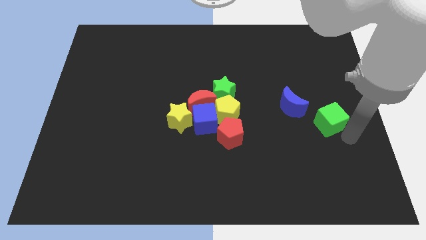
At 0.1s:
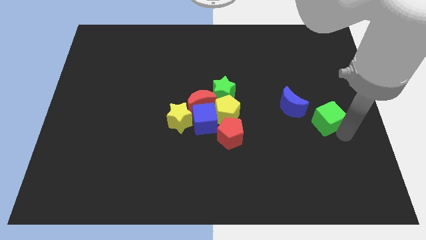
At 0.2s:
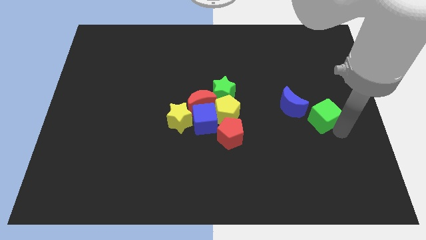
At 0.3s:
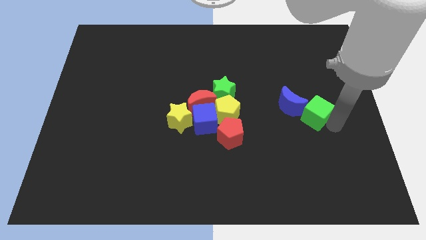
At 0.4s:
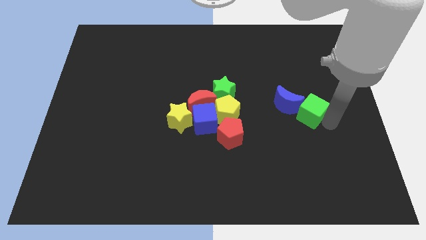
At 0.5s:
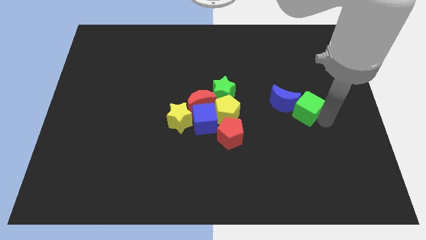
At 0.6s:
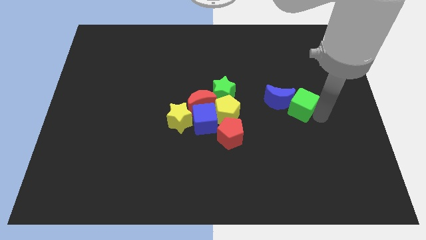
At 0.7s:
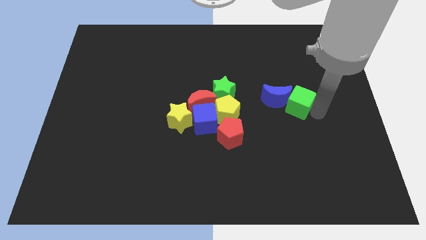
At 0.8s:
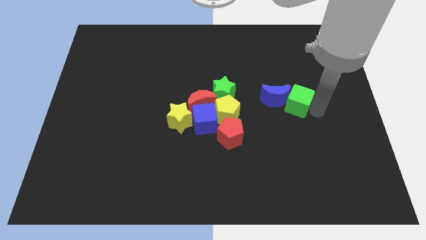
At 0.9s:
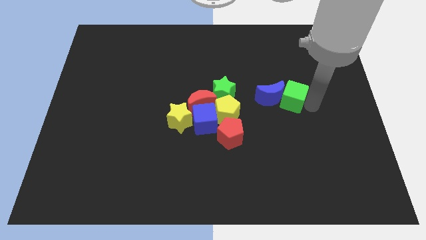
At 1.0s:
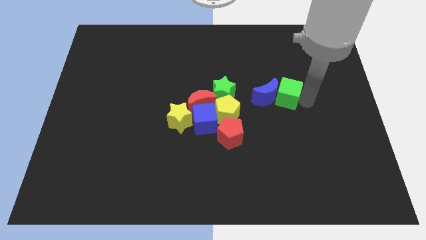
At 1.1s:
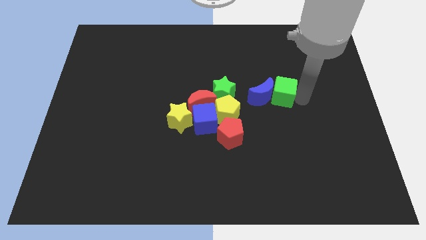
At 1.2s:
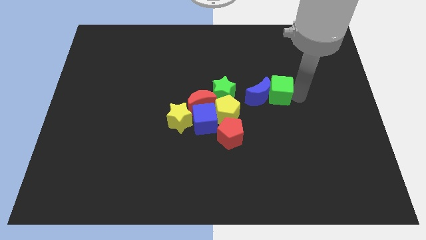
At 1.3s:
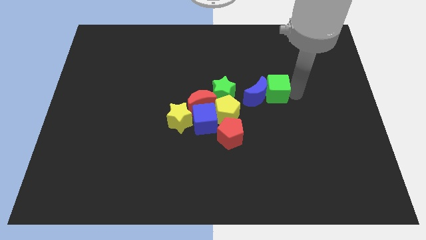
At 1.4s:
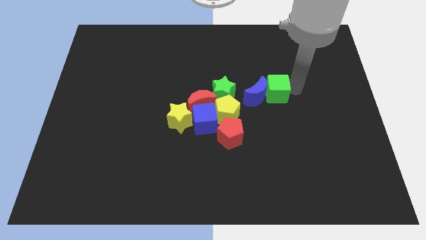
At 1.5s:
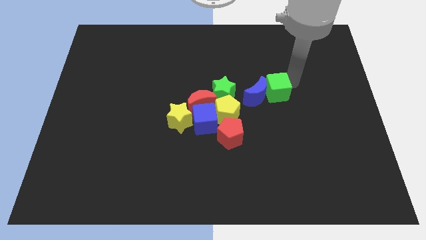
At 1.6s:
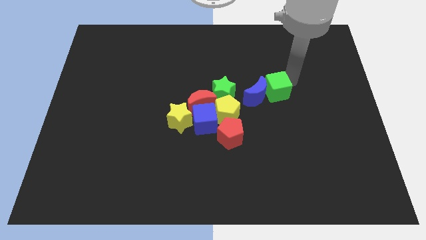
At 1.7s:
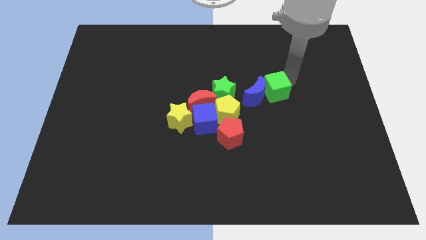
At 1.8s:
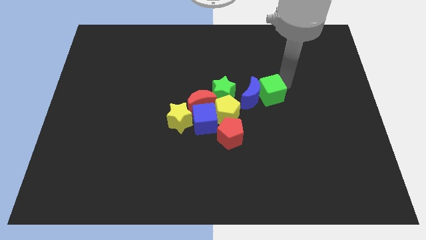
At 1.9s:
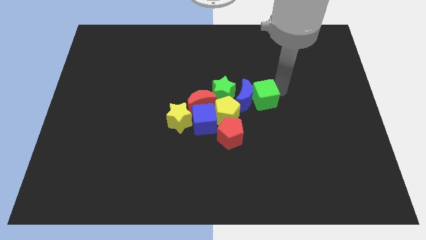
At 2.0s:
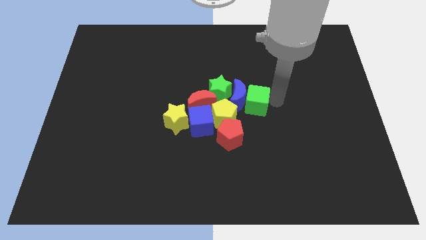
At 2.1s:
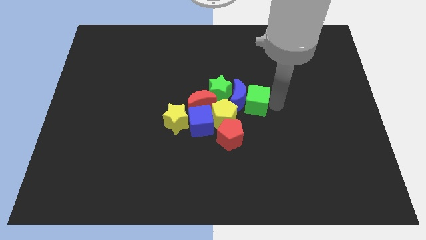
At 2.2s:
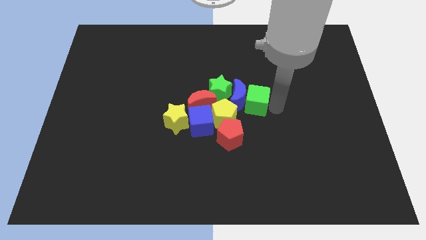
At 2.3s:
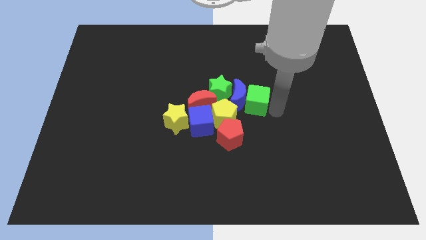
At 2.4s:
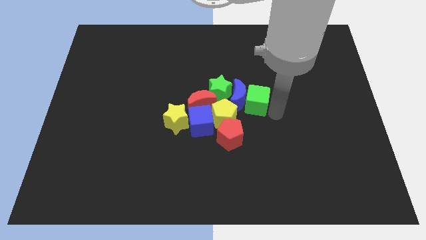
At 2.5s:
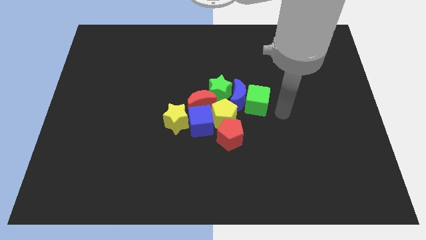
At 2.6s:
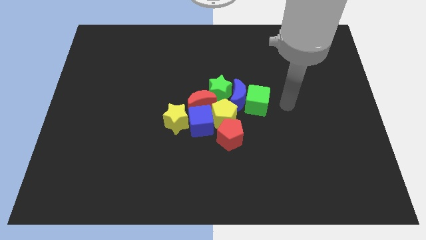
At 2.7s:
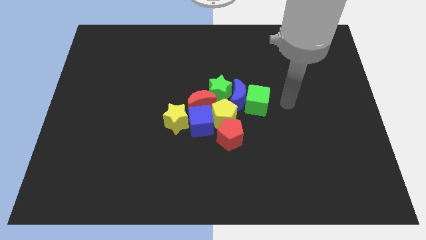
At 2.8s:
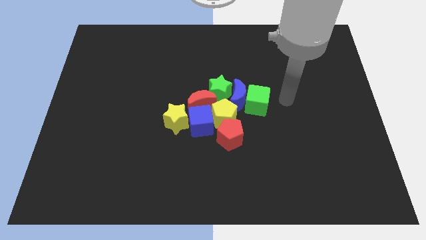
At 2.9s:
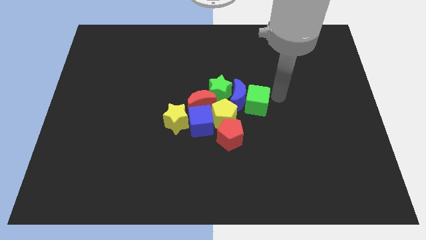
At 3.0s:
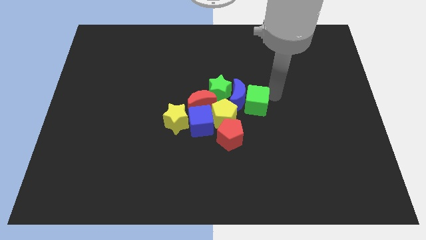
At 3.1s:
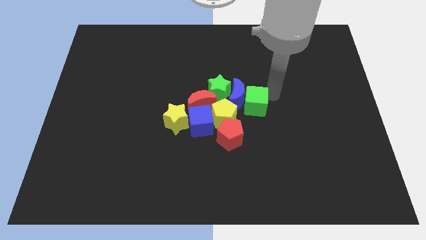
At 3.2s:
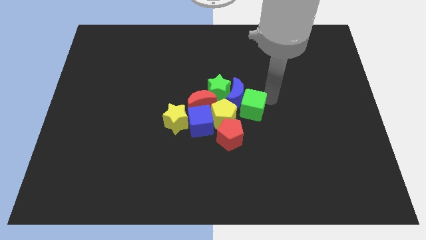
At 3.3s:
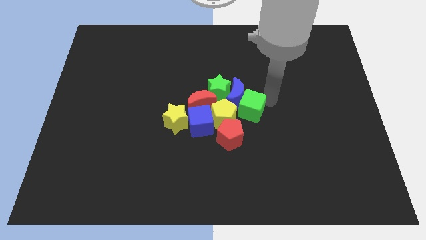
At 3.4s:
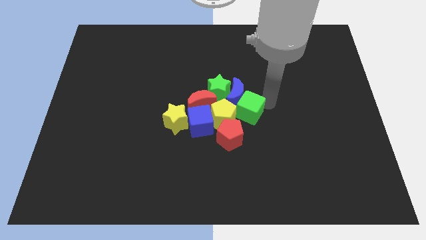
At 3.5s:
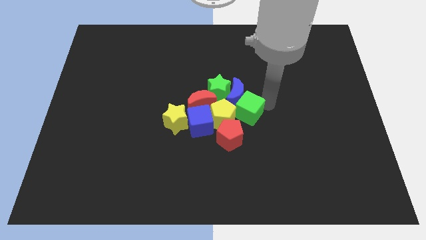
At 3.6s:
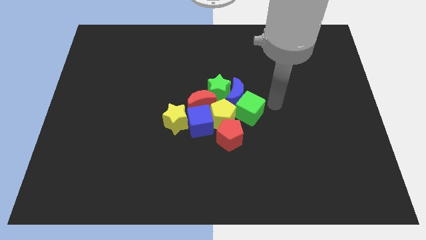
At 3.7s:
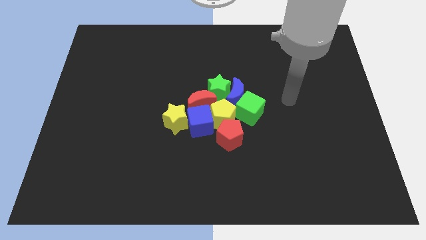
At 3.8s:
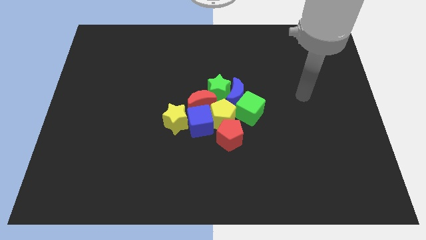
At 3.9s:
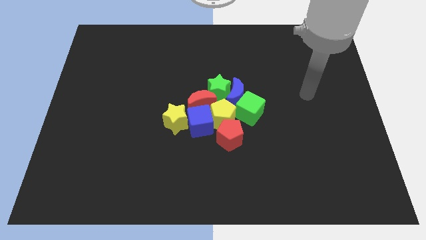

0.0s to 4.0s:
push the green cube and blue crescent into the group of blocks

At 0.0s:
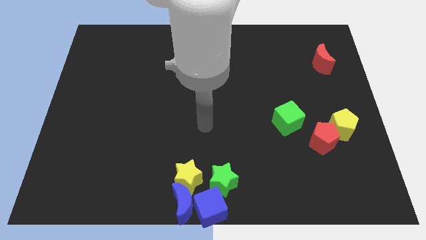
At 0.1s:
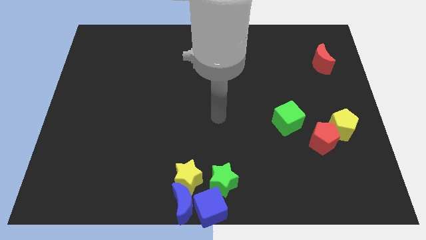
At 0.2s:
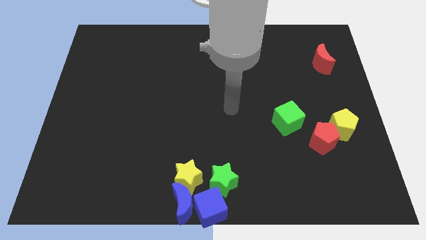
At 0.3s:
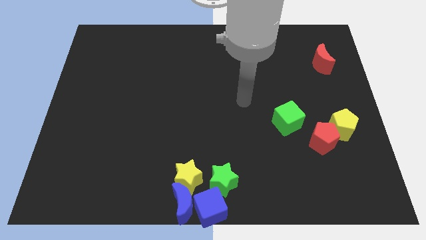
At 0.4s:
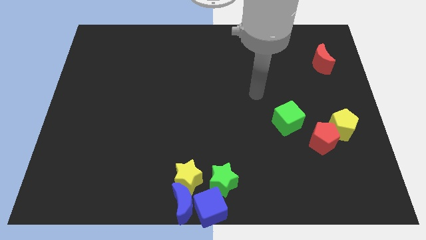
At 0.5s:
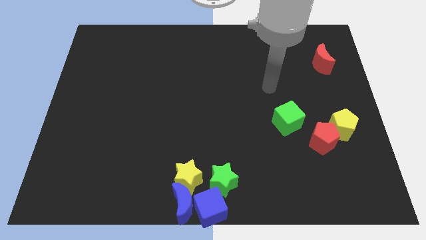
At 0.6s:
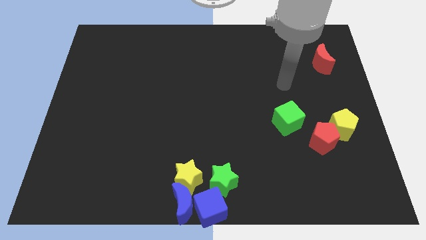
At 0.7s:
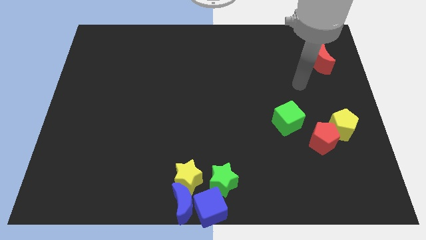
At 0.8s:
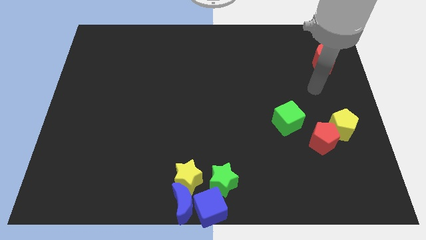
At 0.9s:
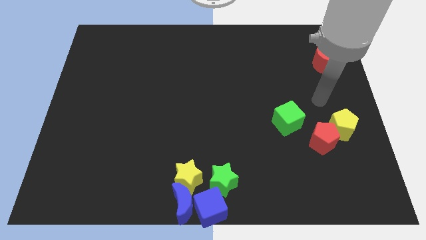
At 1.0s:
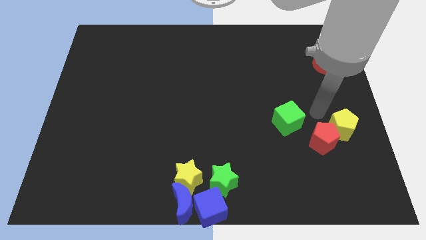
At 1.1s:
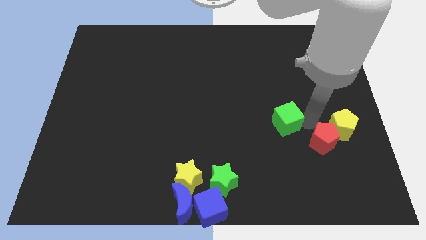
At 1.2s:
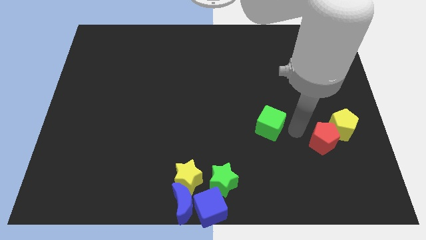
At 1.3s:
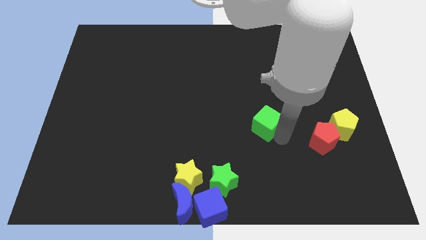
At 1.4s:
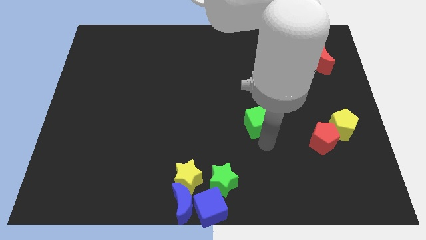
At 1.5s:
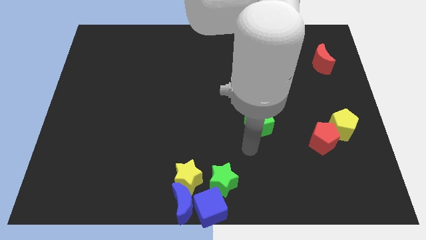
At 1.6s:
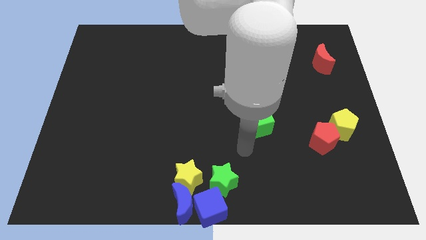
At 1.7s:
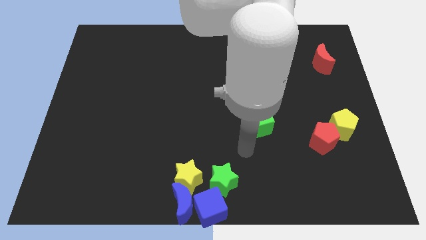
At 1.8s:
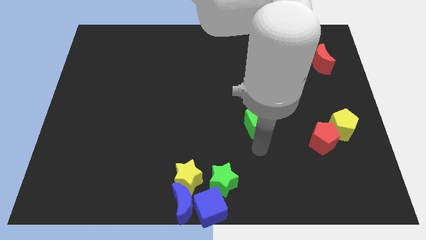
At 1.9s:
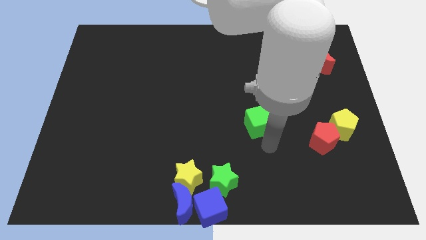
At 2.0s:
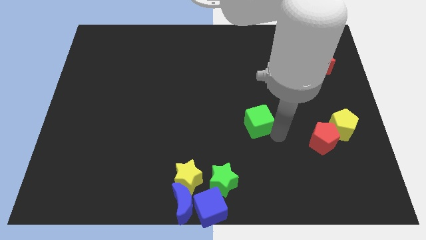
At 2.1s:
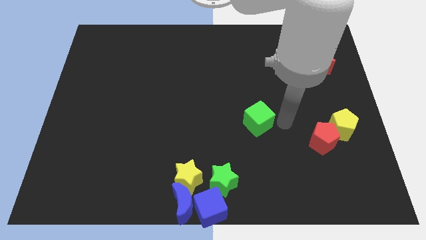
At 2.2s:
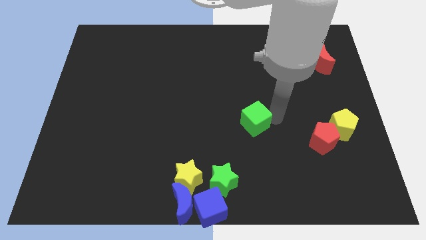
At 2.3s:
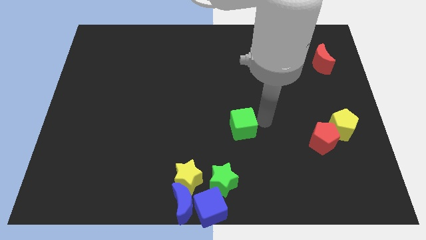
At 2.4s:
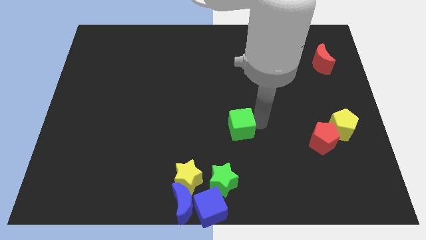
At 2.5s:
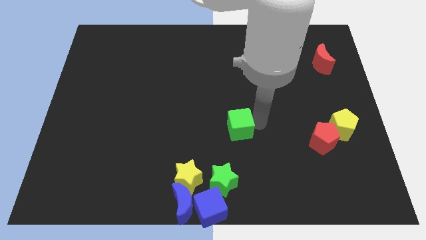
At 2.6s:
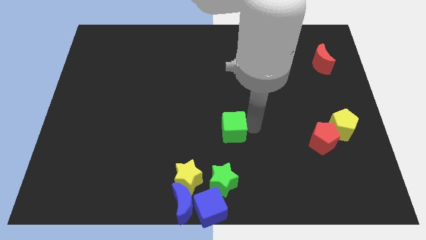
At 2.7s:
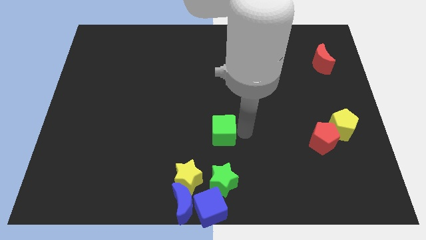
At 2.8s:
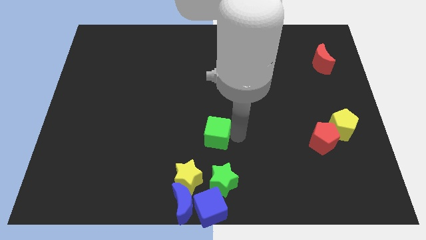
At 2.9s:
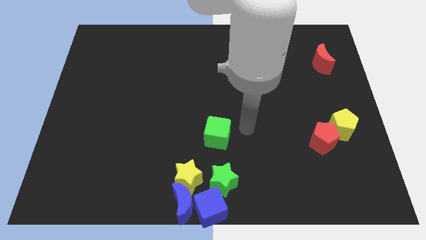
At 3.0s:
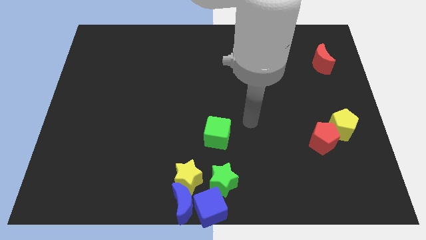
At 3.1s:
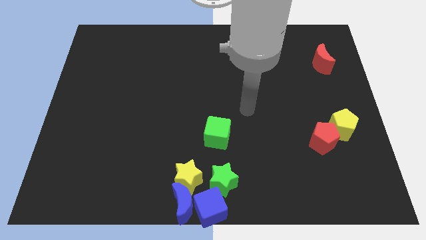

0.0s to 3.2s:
push the green cube above the green star

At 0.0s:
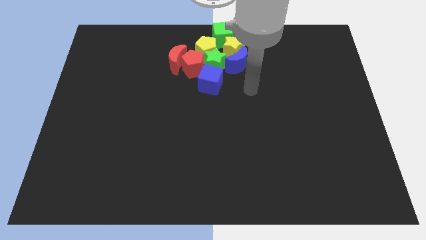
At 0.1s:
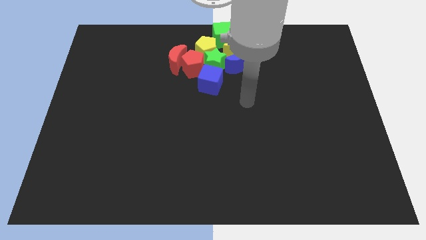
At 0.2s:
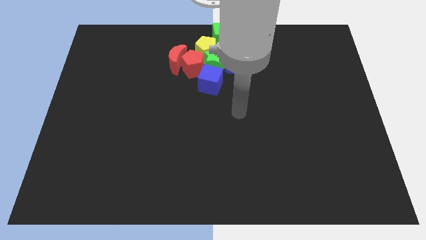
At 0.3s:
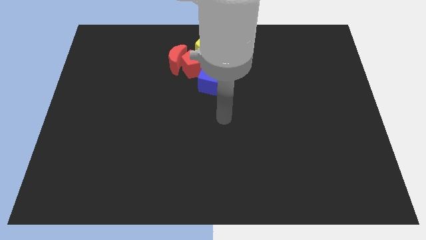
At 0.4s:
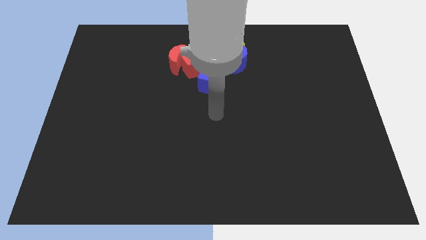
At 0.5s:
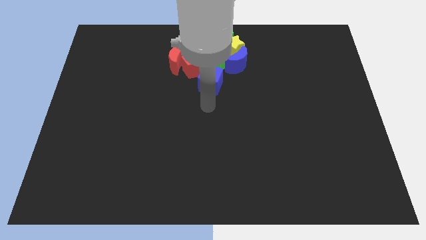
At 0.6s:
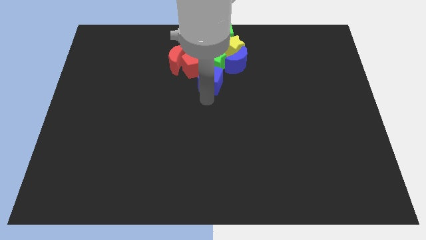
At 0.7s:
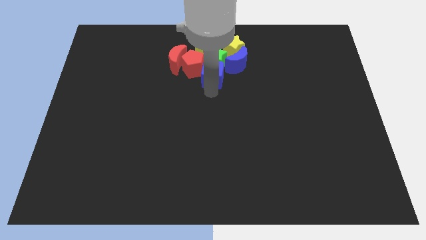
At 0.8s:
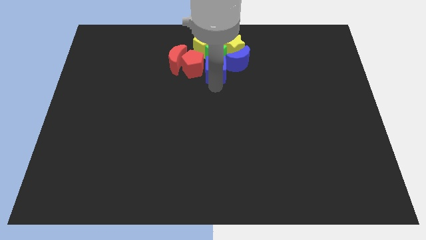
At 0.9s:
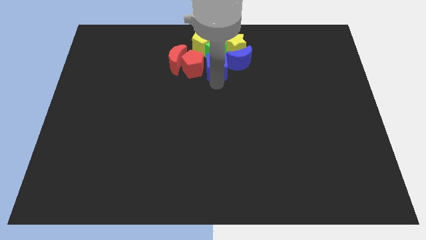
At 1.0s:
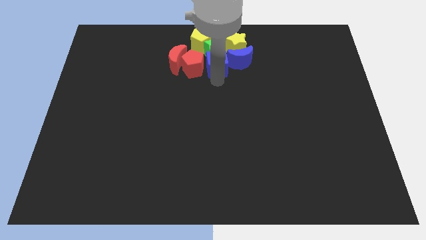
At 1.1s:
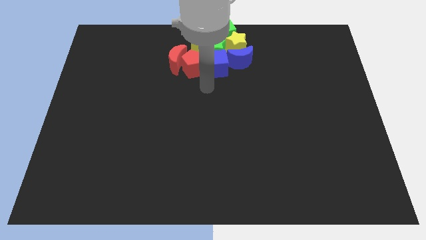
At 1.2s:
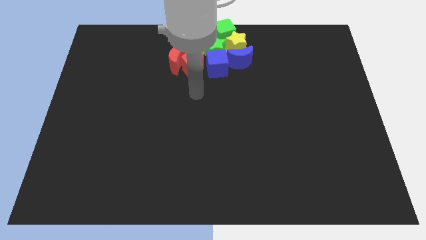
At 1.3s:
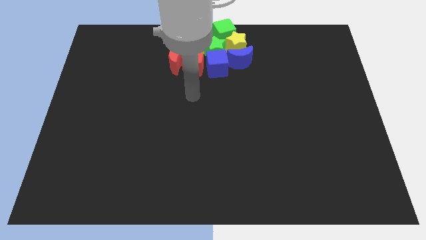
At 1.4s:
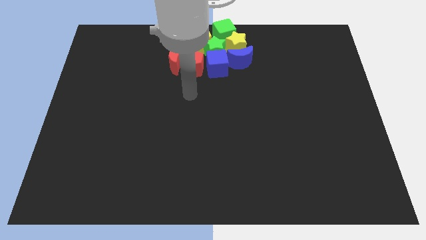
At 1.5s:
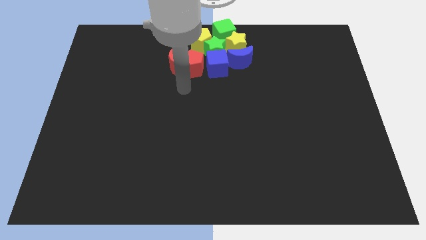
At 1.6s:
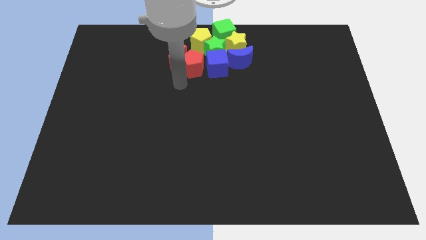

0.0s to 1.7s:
push the blue cube into the green star

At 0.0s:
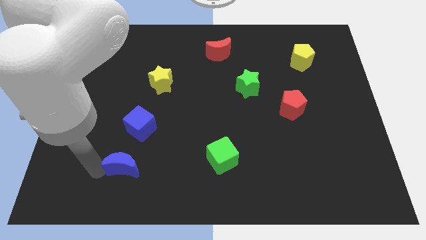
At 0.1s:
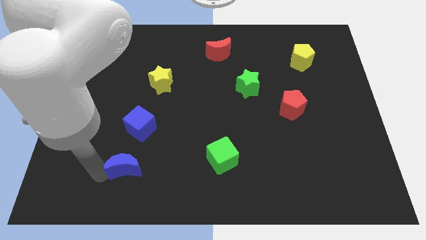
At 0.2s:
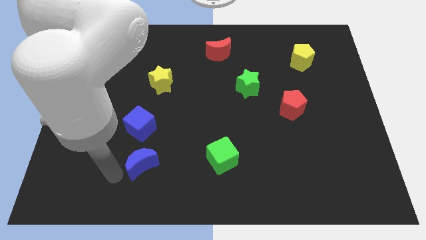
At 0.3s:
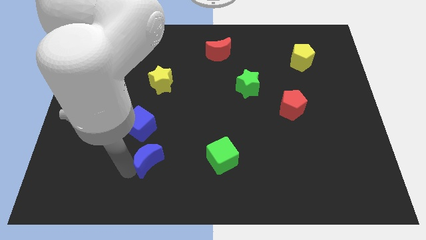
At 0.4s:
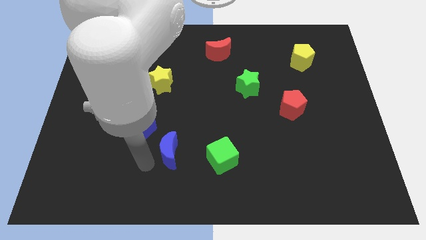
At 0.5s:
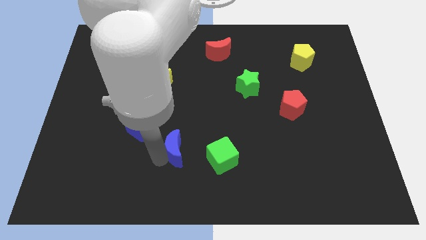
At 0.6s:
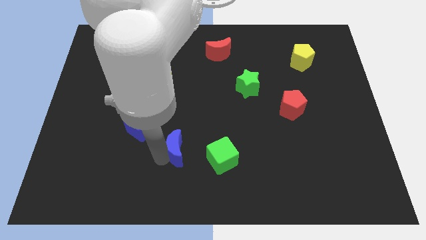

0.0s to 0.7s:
move the blue crescent towards green cube
